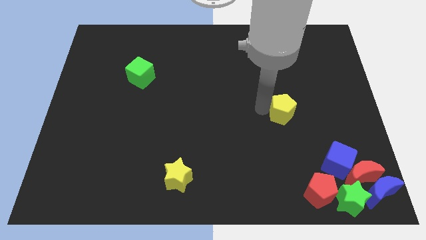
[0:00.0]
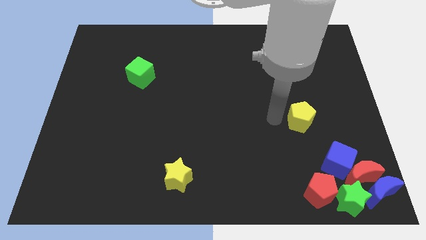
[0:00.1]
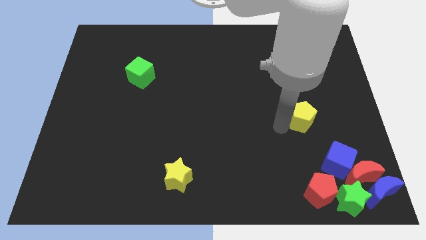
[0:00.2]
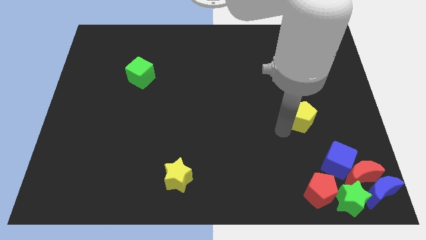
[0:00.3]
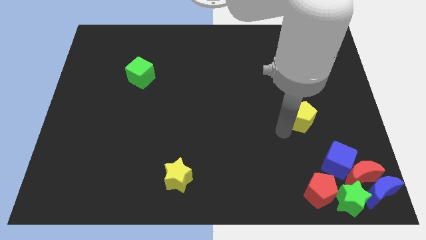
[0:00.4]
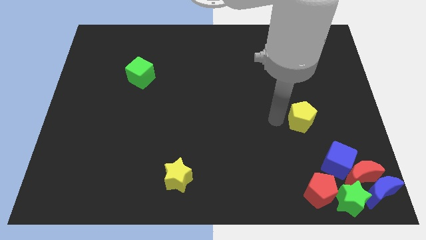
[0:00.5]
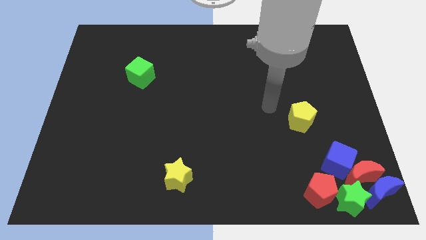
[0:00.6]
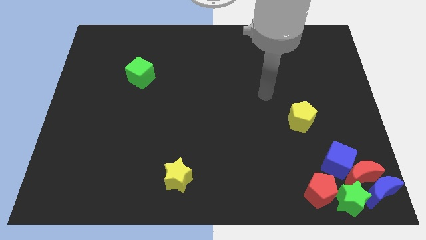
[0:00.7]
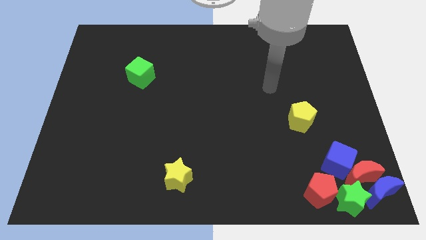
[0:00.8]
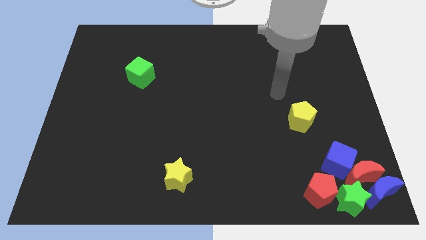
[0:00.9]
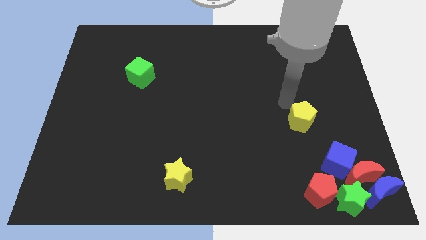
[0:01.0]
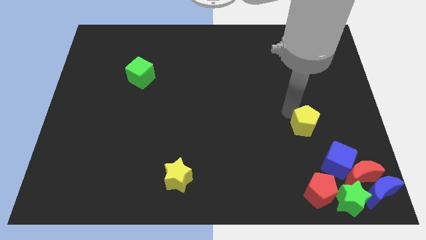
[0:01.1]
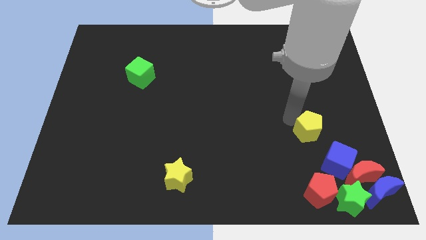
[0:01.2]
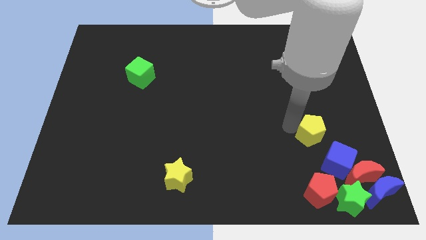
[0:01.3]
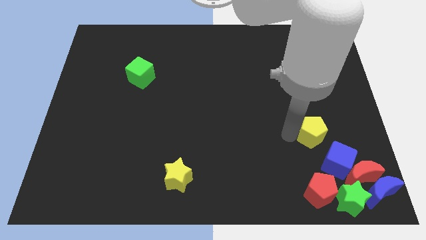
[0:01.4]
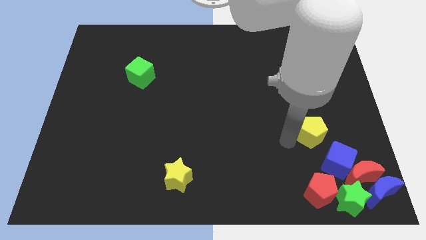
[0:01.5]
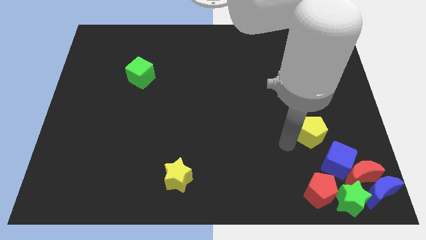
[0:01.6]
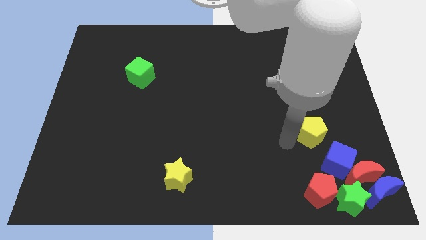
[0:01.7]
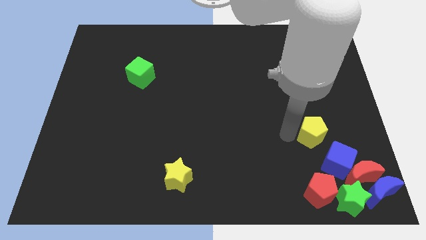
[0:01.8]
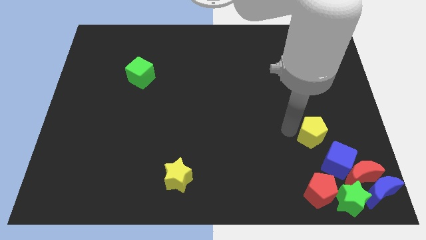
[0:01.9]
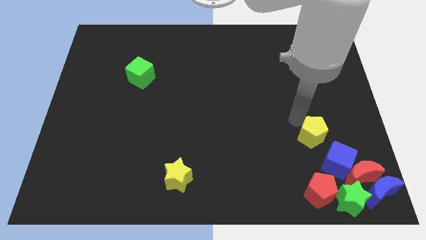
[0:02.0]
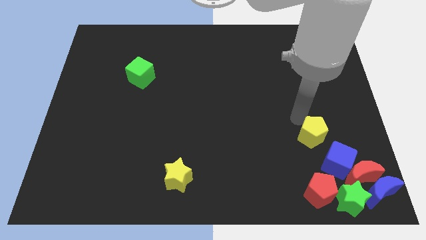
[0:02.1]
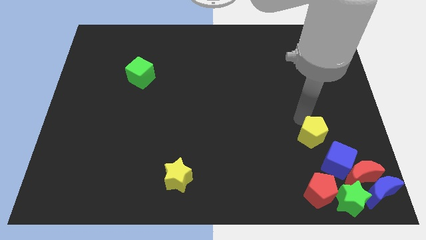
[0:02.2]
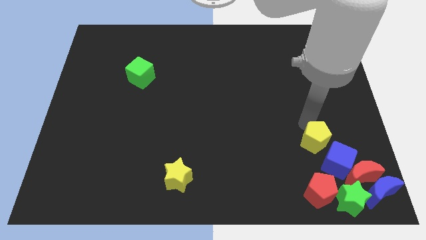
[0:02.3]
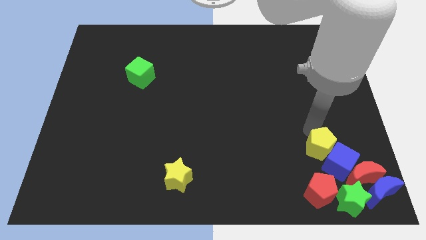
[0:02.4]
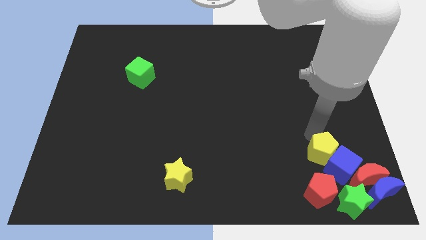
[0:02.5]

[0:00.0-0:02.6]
push the yellow pentagon into the blue cube

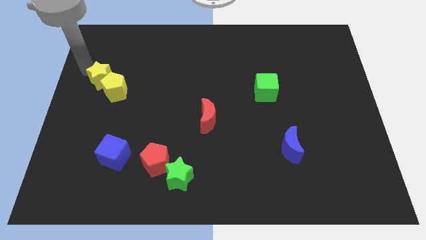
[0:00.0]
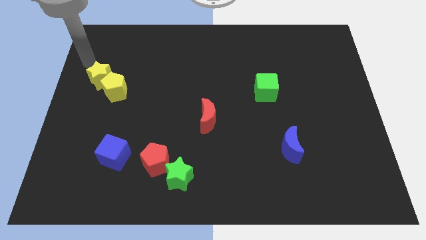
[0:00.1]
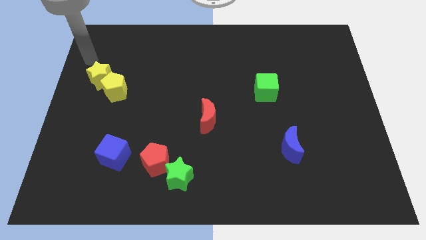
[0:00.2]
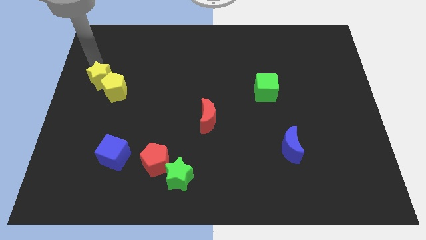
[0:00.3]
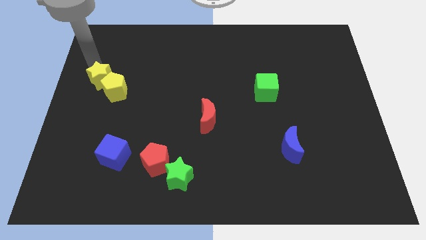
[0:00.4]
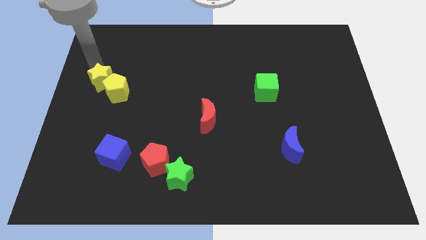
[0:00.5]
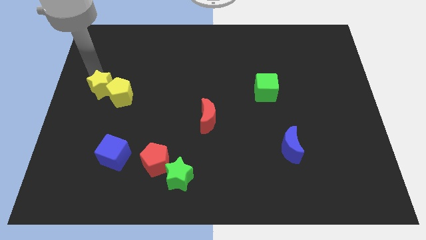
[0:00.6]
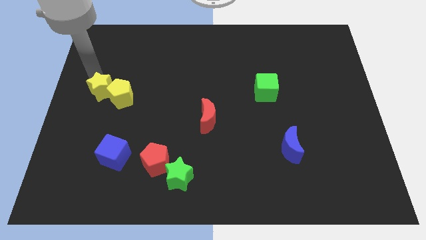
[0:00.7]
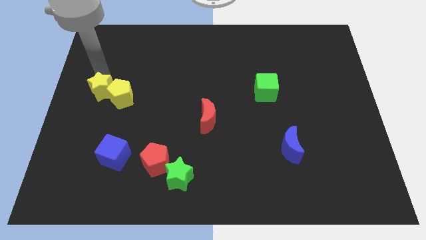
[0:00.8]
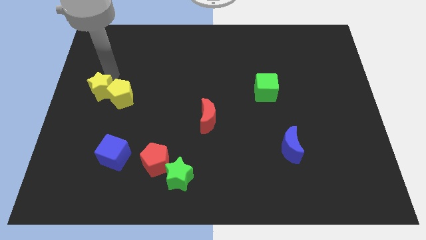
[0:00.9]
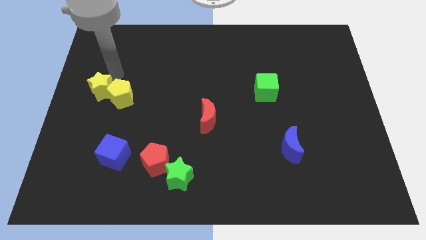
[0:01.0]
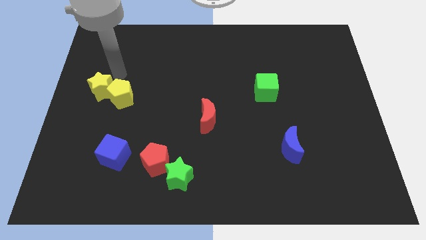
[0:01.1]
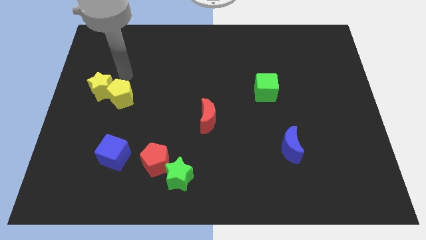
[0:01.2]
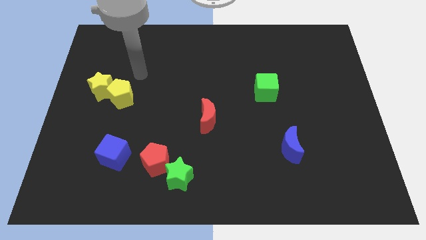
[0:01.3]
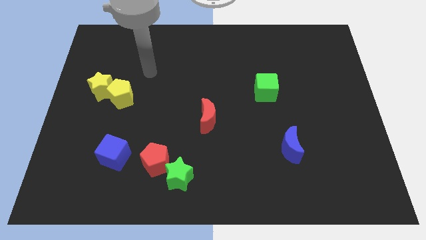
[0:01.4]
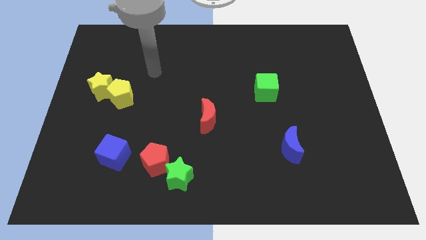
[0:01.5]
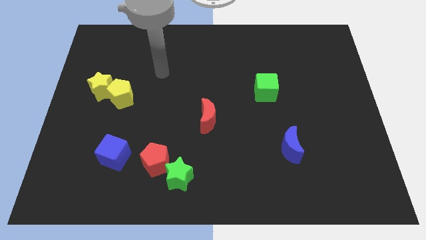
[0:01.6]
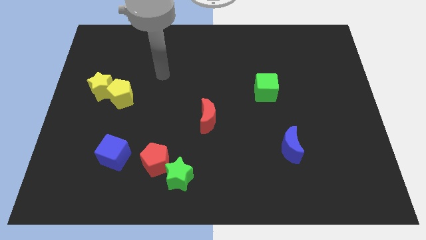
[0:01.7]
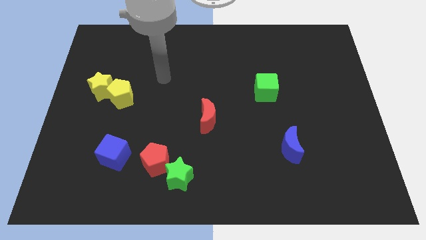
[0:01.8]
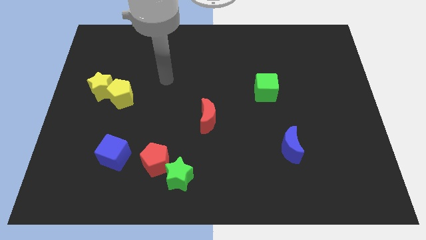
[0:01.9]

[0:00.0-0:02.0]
push the yellow star into the yellow pentagon

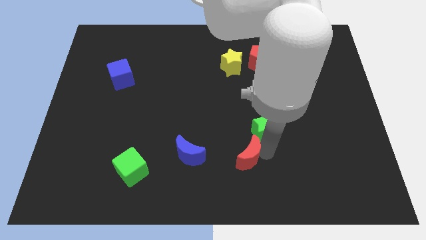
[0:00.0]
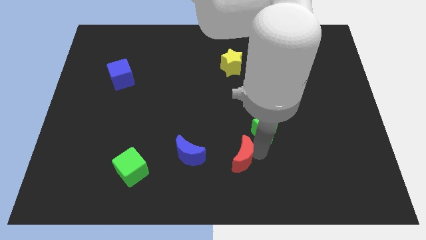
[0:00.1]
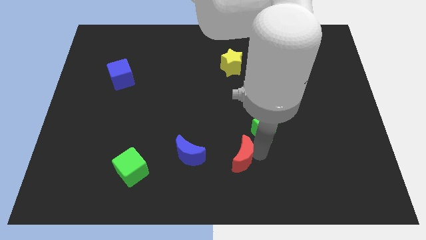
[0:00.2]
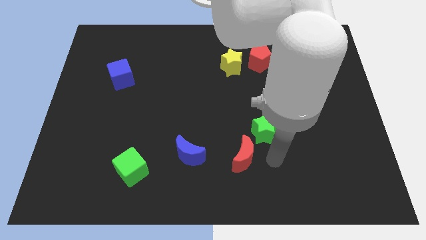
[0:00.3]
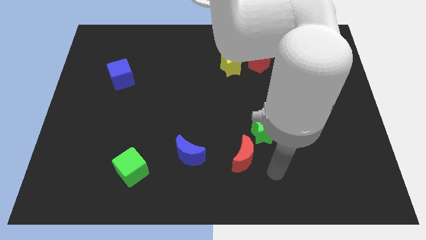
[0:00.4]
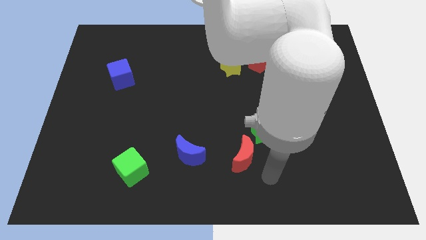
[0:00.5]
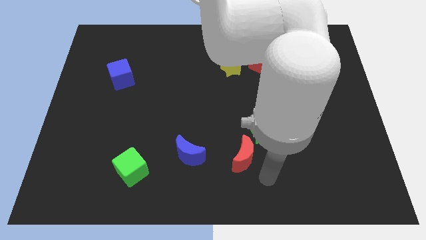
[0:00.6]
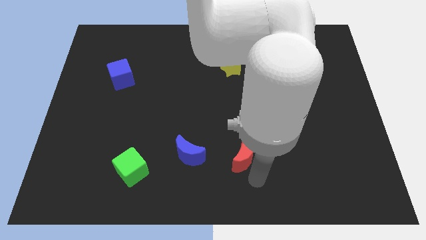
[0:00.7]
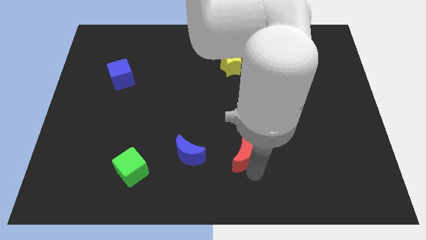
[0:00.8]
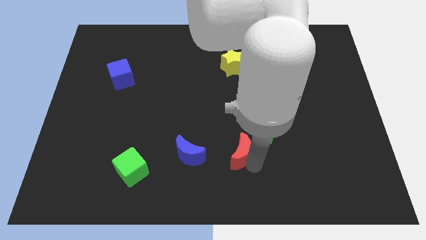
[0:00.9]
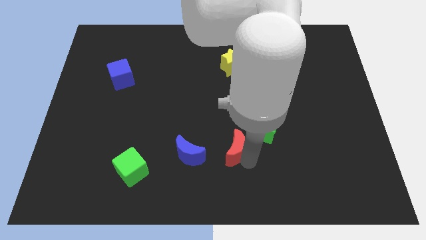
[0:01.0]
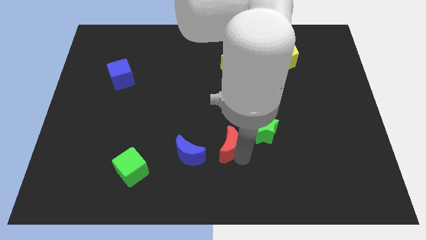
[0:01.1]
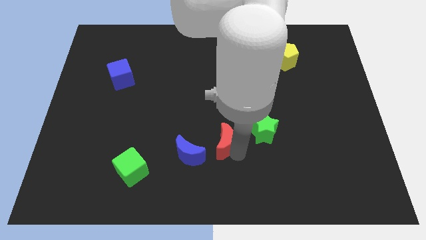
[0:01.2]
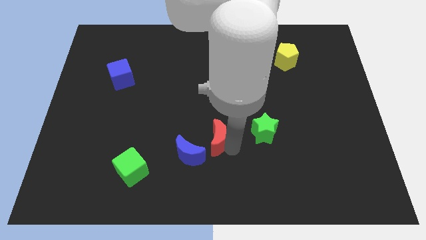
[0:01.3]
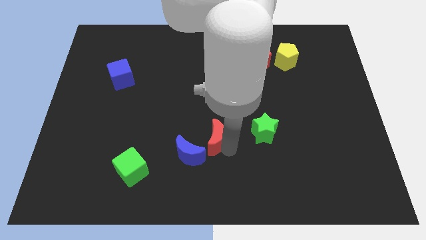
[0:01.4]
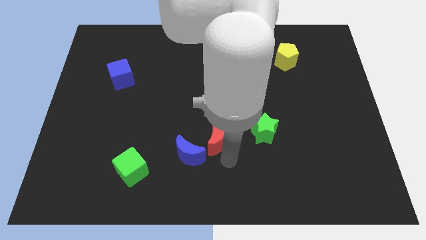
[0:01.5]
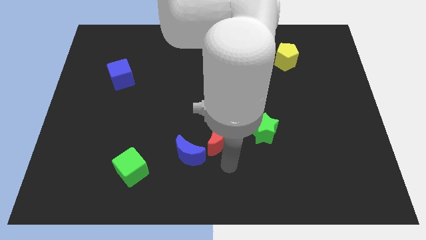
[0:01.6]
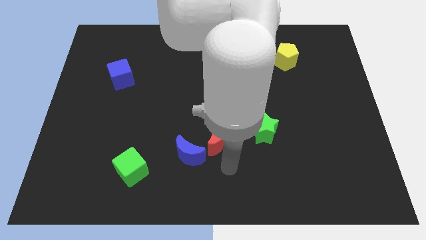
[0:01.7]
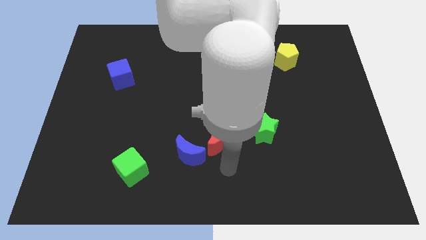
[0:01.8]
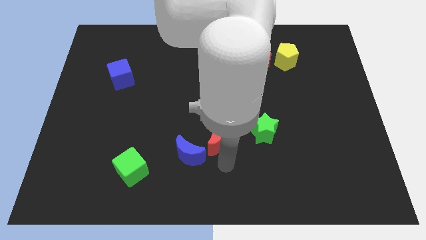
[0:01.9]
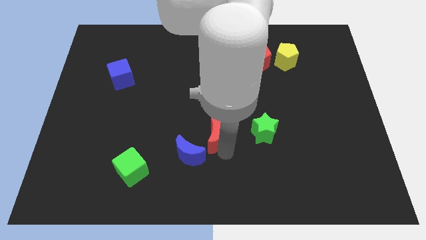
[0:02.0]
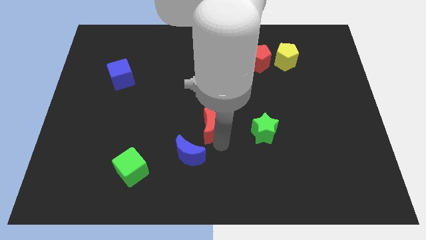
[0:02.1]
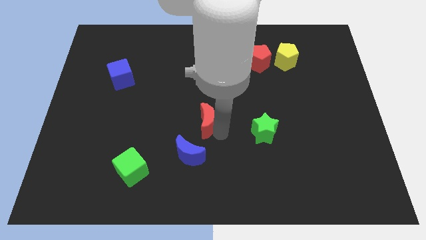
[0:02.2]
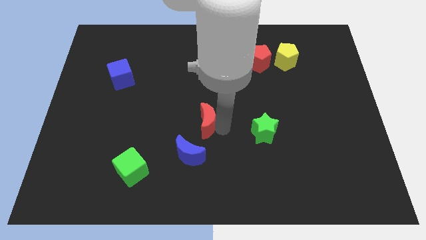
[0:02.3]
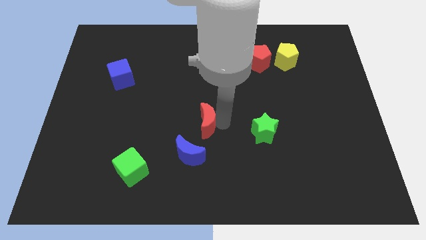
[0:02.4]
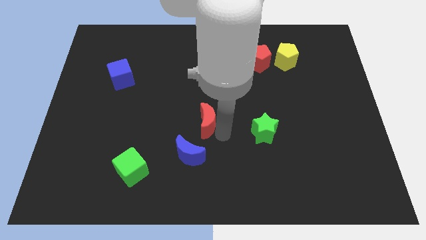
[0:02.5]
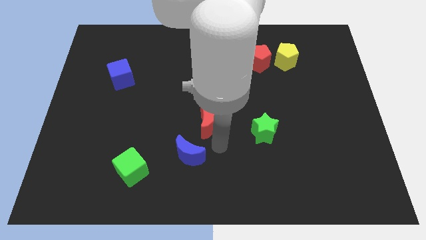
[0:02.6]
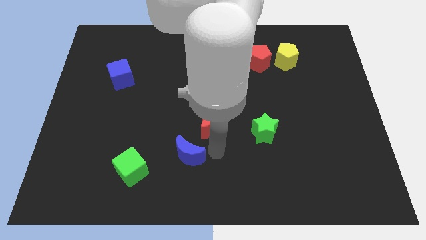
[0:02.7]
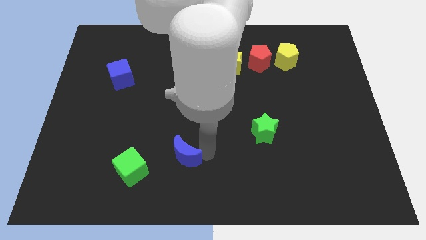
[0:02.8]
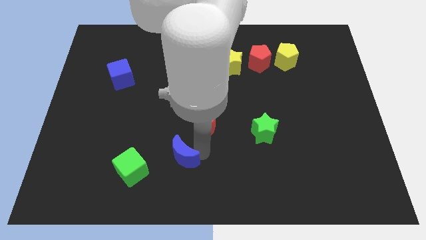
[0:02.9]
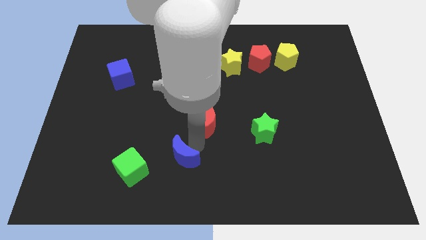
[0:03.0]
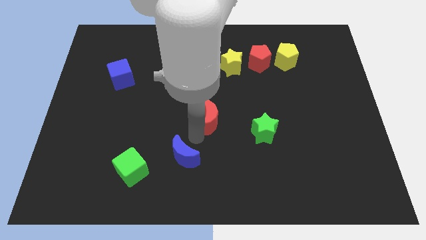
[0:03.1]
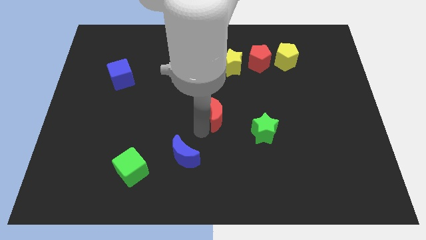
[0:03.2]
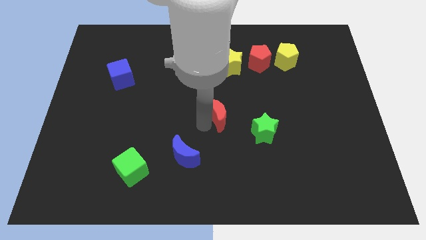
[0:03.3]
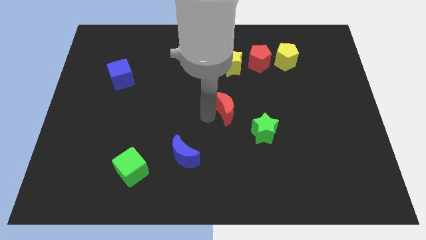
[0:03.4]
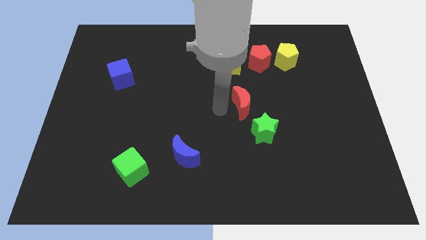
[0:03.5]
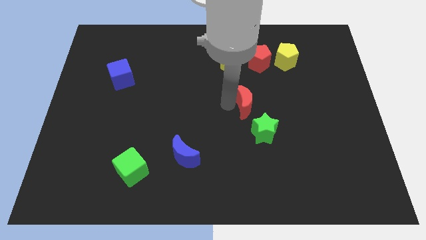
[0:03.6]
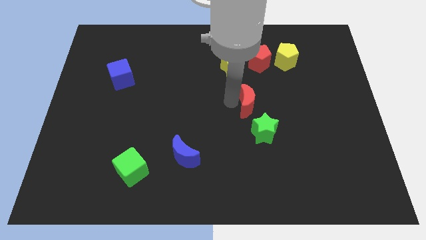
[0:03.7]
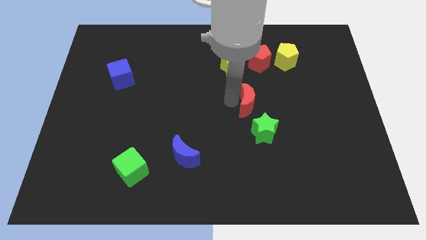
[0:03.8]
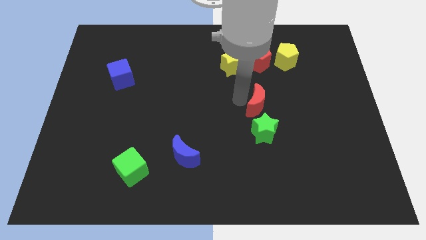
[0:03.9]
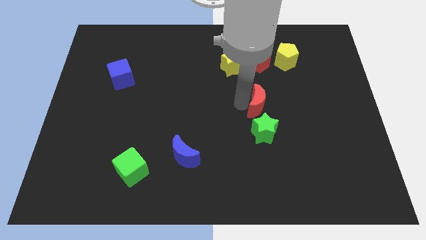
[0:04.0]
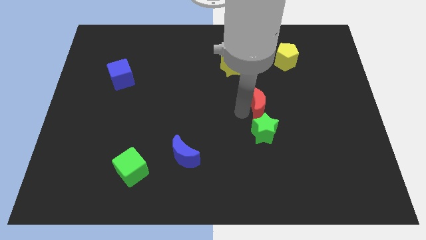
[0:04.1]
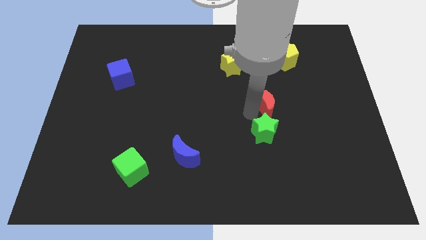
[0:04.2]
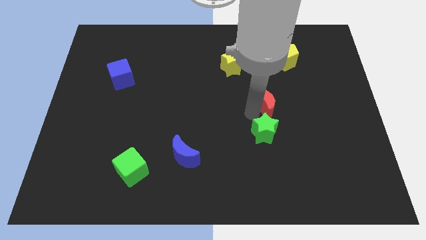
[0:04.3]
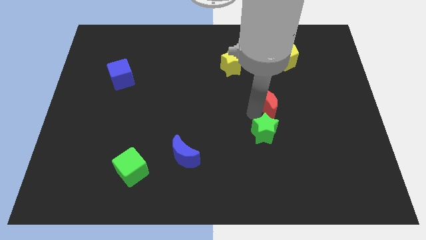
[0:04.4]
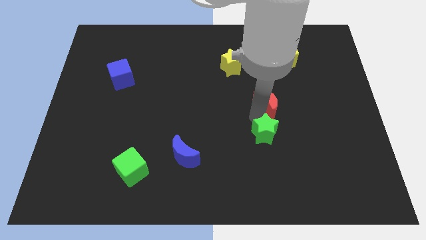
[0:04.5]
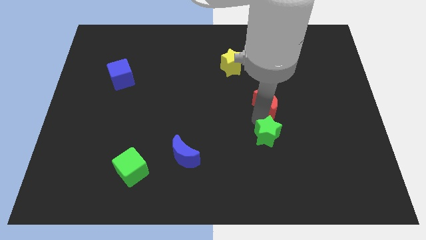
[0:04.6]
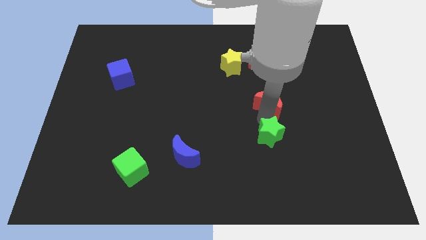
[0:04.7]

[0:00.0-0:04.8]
place the red crescent above the green star
